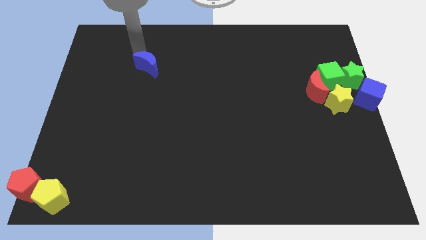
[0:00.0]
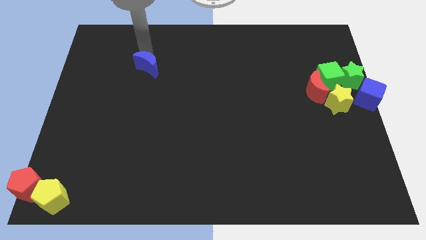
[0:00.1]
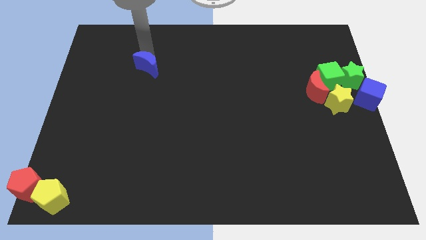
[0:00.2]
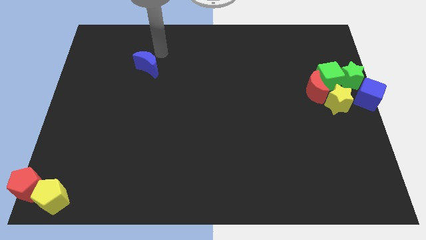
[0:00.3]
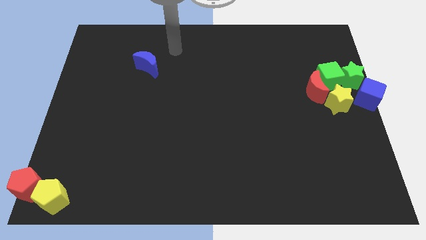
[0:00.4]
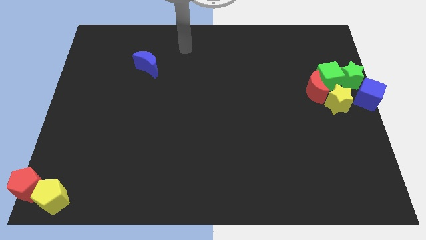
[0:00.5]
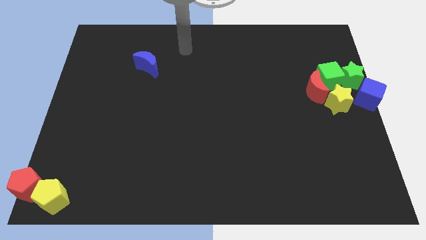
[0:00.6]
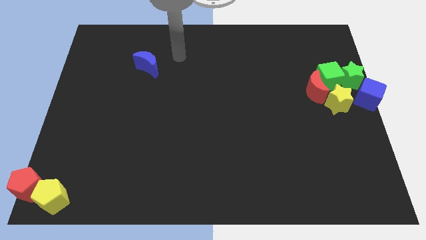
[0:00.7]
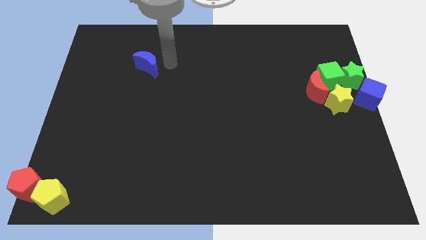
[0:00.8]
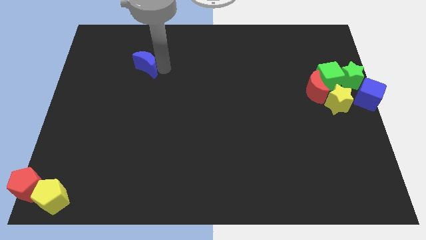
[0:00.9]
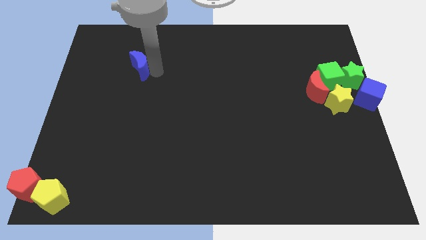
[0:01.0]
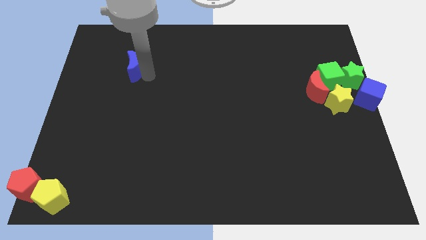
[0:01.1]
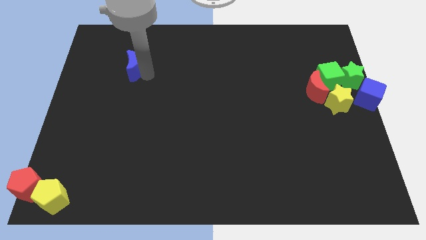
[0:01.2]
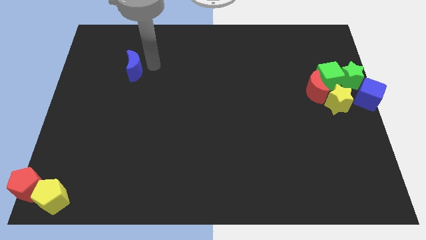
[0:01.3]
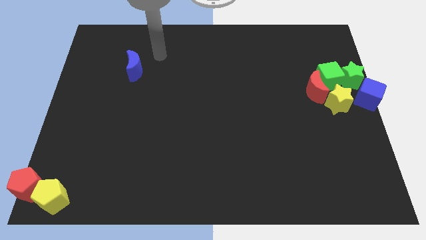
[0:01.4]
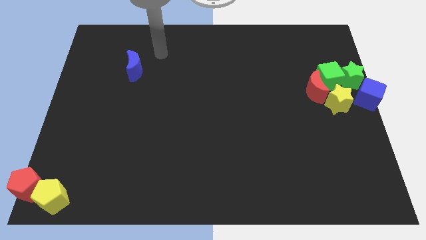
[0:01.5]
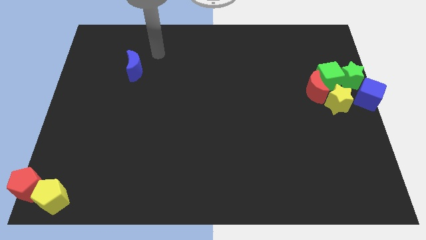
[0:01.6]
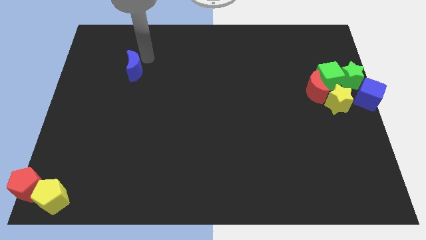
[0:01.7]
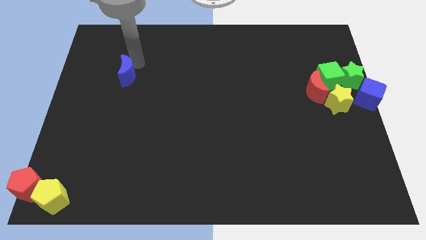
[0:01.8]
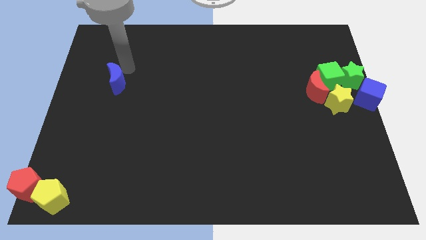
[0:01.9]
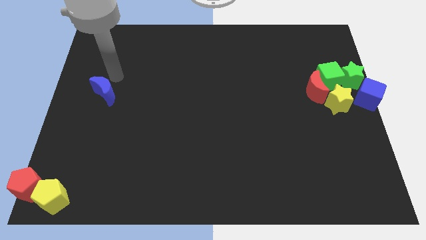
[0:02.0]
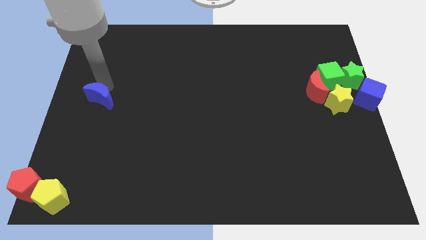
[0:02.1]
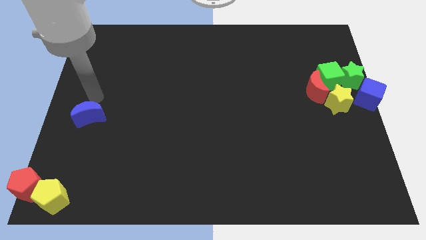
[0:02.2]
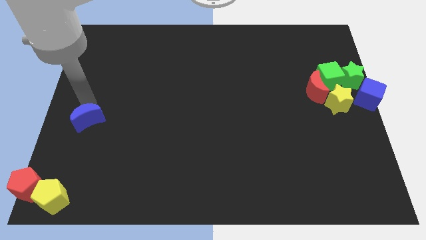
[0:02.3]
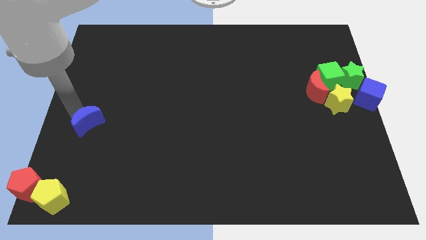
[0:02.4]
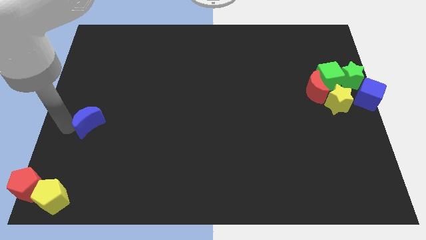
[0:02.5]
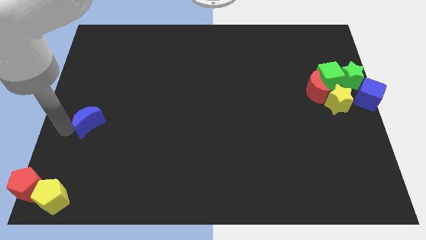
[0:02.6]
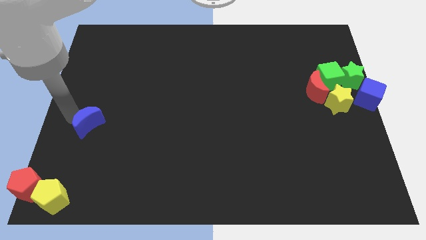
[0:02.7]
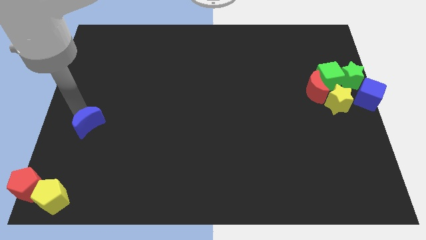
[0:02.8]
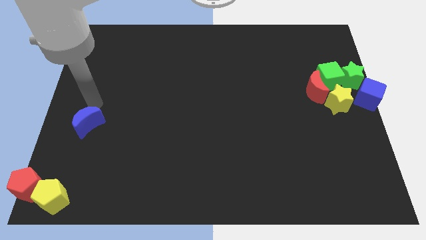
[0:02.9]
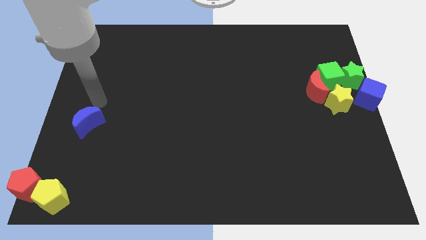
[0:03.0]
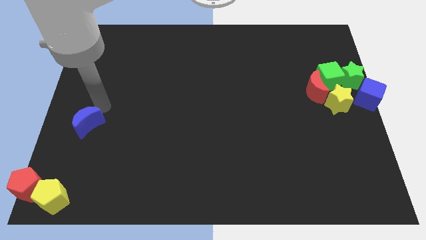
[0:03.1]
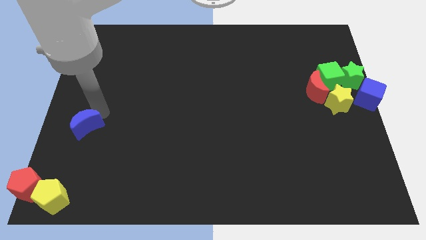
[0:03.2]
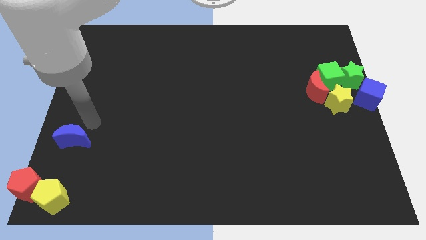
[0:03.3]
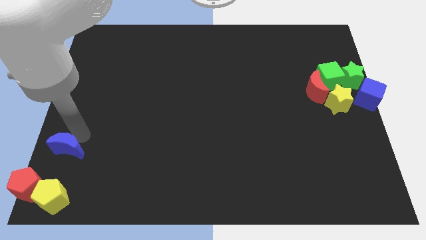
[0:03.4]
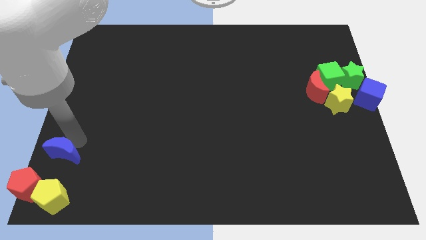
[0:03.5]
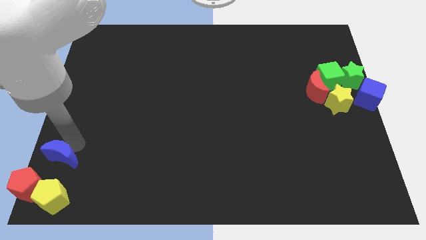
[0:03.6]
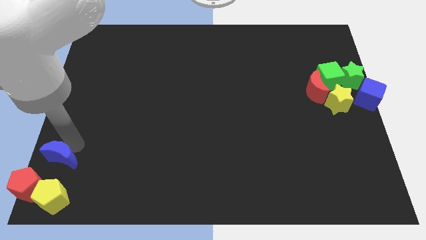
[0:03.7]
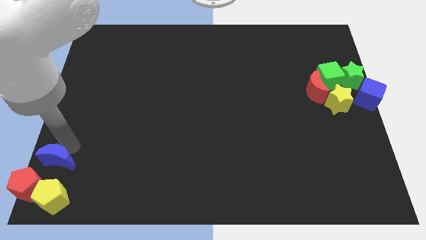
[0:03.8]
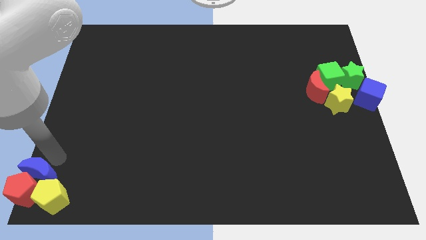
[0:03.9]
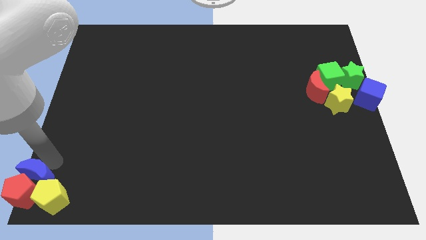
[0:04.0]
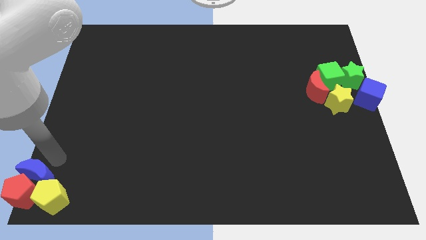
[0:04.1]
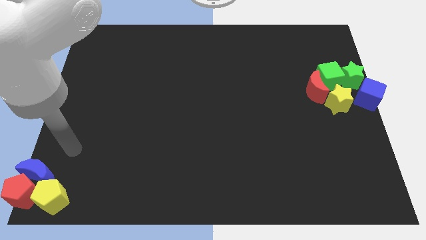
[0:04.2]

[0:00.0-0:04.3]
place the blue crescent into the red pentagon

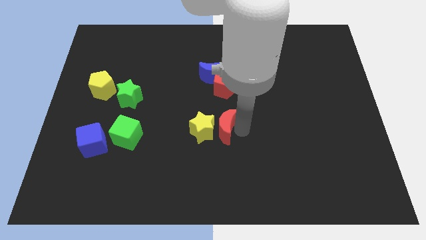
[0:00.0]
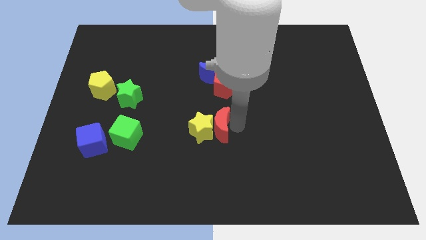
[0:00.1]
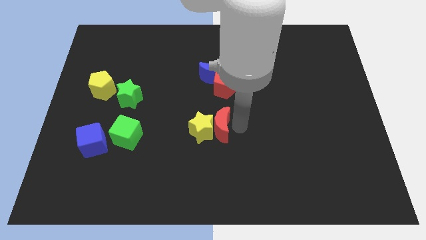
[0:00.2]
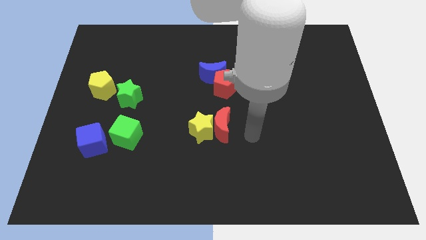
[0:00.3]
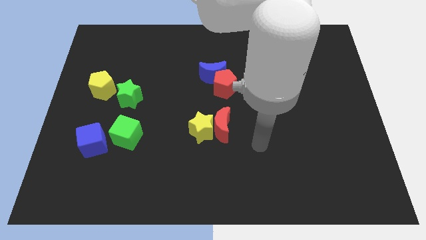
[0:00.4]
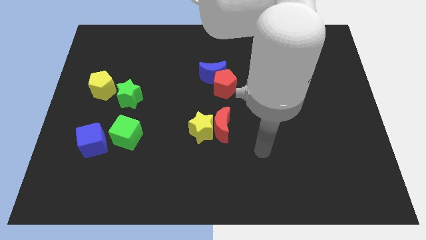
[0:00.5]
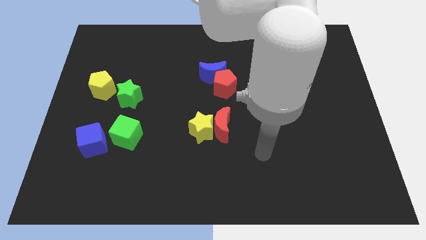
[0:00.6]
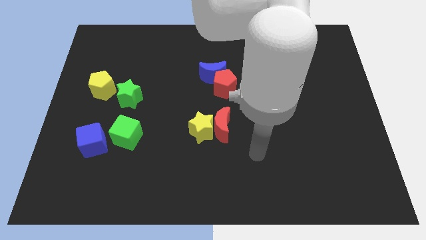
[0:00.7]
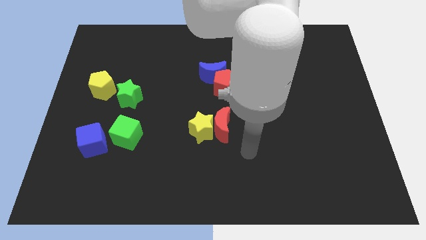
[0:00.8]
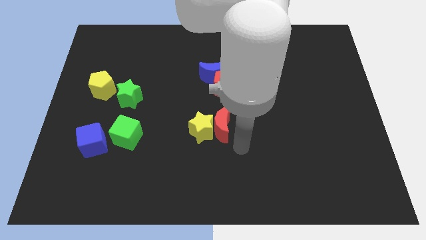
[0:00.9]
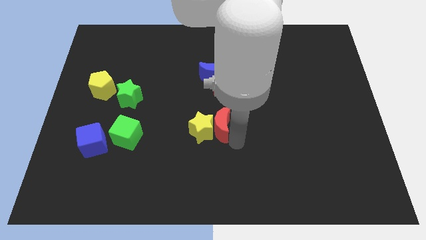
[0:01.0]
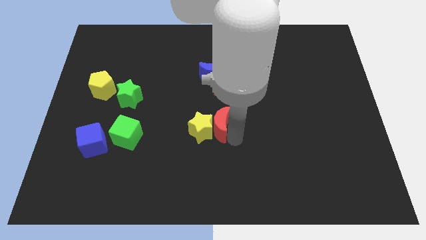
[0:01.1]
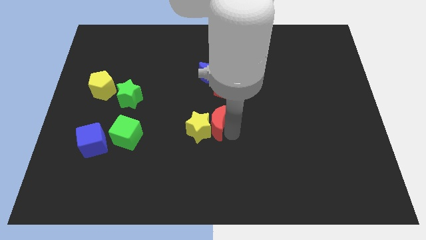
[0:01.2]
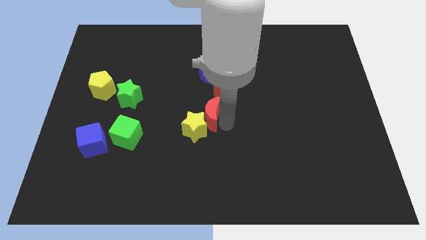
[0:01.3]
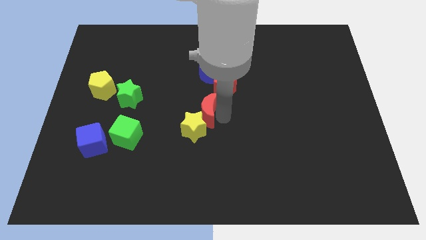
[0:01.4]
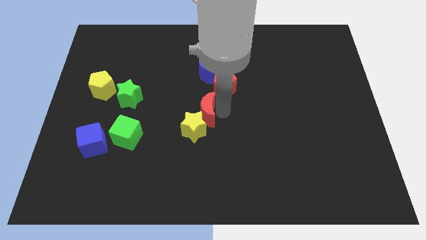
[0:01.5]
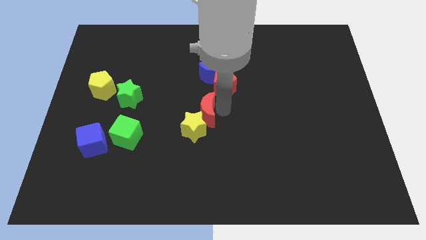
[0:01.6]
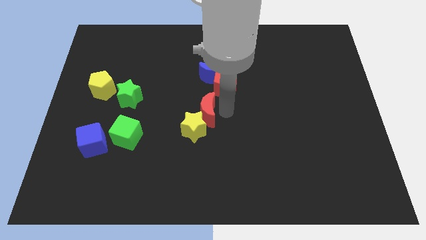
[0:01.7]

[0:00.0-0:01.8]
move the arm to the bottom of the red pentagon

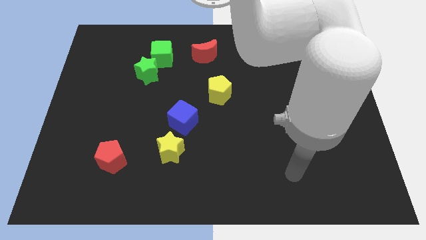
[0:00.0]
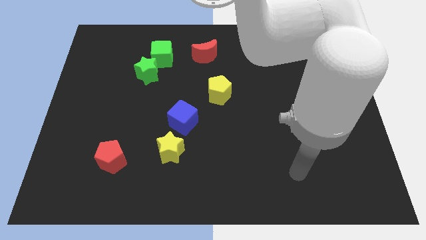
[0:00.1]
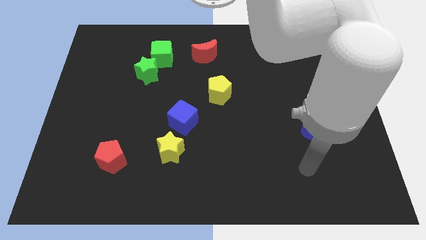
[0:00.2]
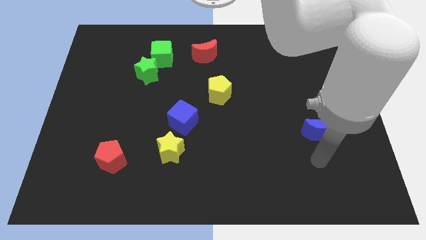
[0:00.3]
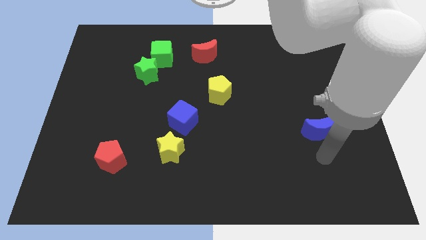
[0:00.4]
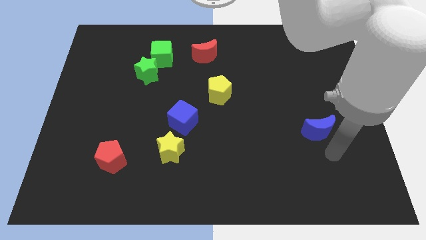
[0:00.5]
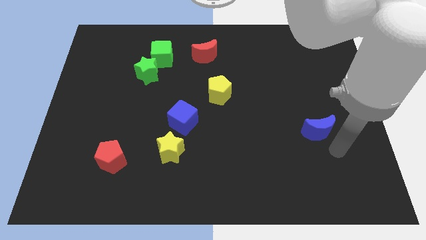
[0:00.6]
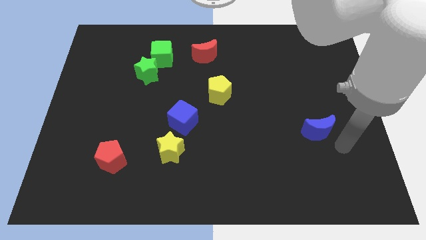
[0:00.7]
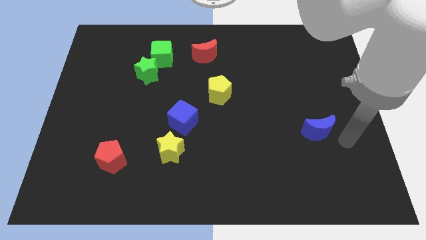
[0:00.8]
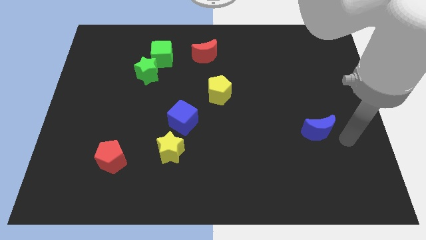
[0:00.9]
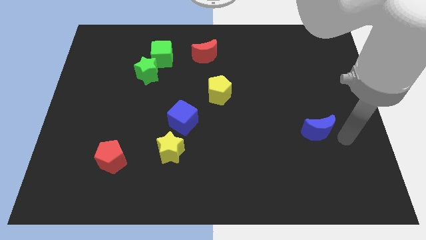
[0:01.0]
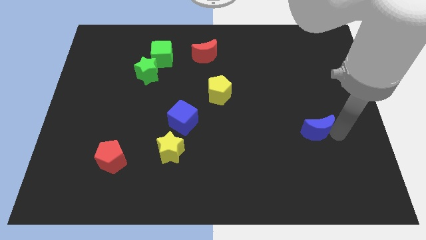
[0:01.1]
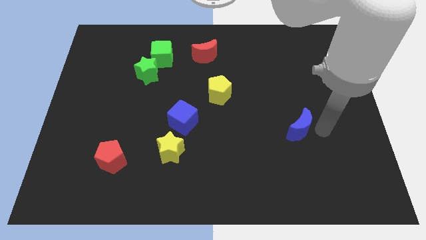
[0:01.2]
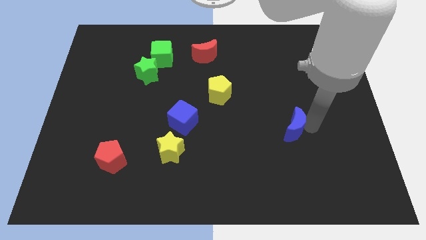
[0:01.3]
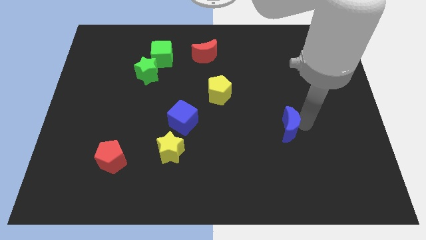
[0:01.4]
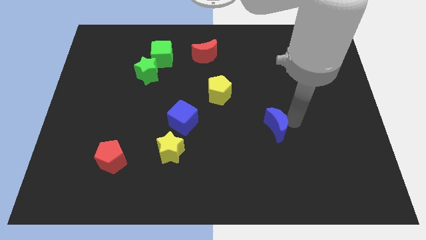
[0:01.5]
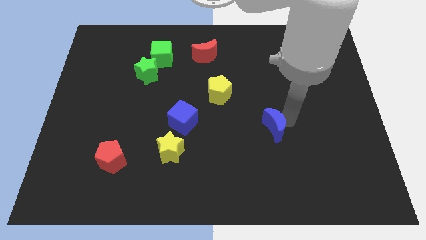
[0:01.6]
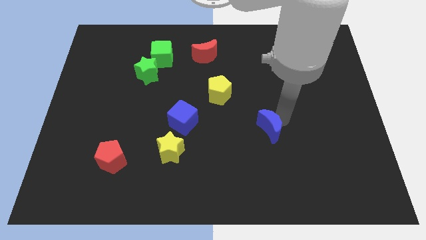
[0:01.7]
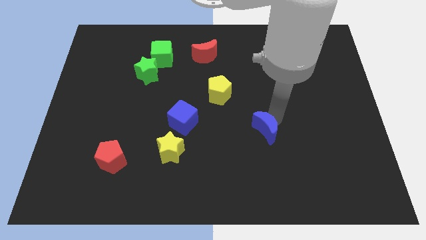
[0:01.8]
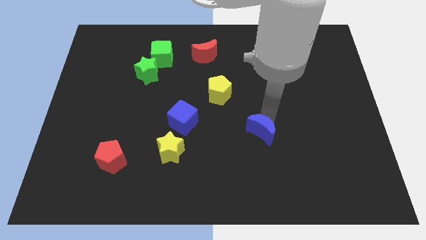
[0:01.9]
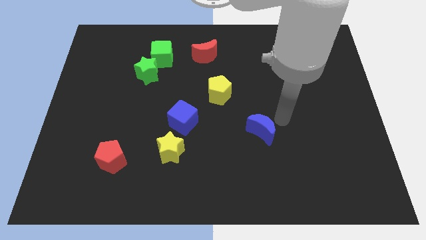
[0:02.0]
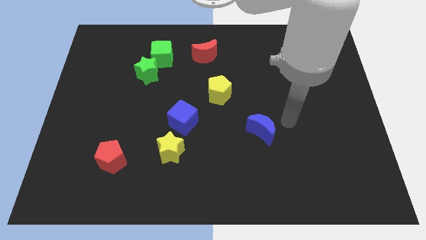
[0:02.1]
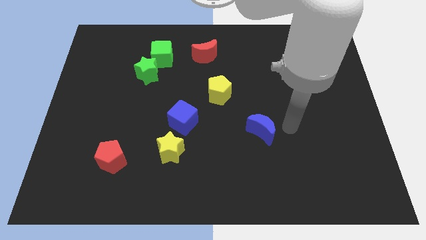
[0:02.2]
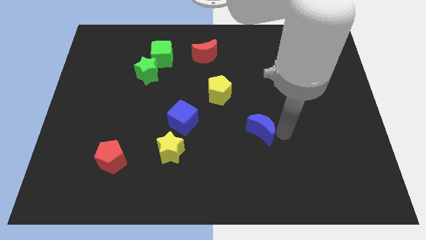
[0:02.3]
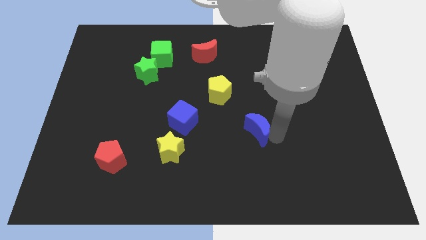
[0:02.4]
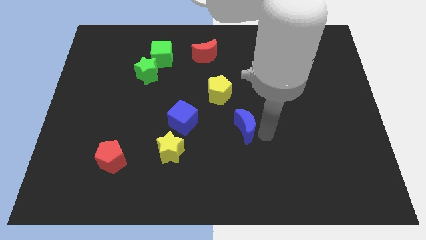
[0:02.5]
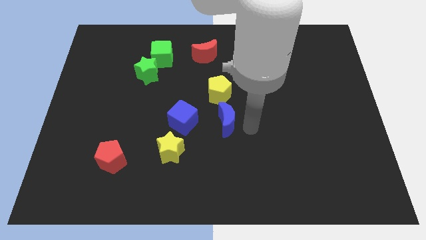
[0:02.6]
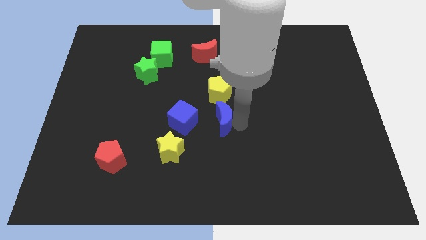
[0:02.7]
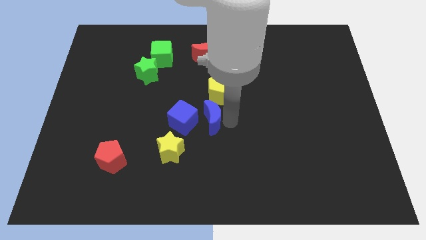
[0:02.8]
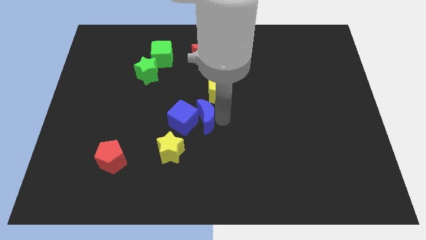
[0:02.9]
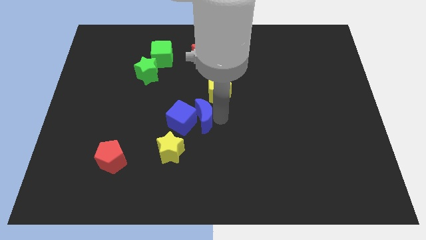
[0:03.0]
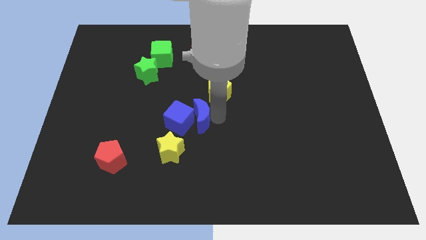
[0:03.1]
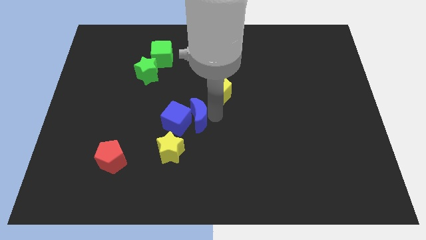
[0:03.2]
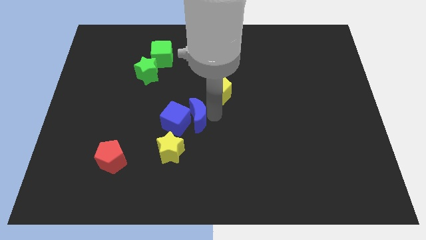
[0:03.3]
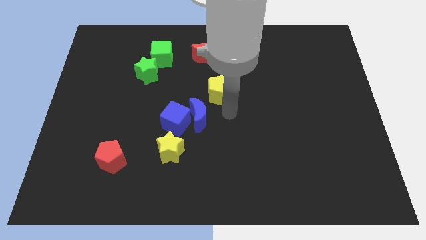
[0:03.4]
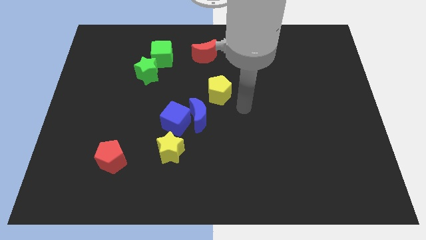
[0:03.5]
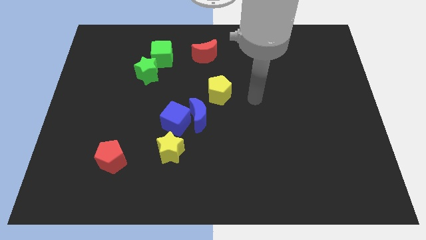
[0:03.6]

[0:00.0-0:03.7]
drag blue moon beside blue cube
